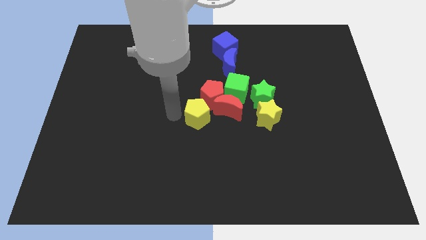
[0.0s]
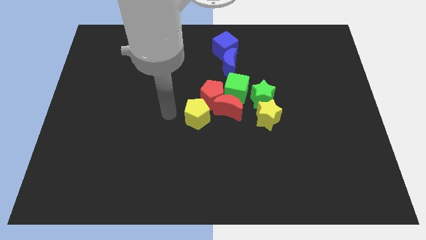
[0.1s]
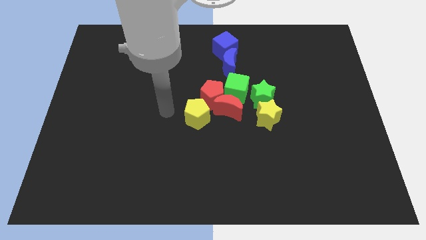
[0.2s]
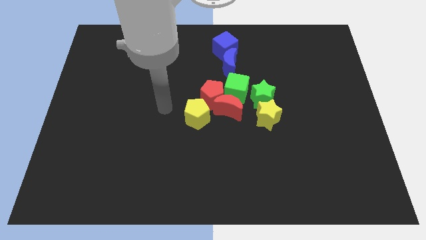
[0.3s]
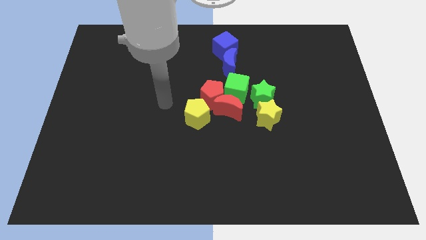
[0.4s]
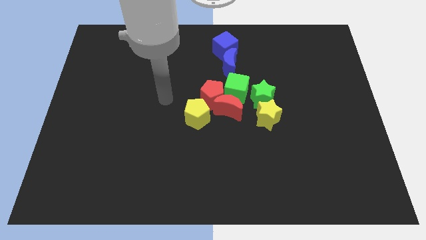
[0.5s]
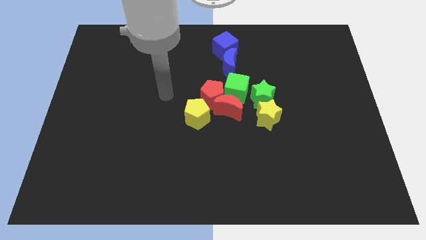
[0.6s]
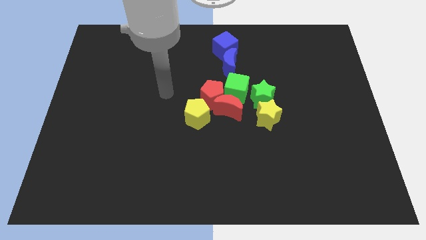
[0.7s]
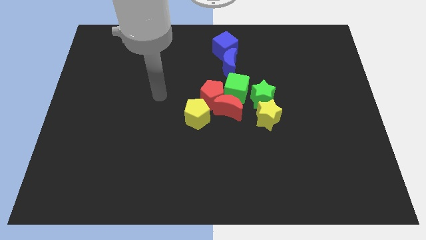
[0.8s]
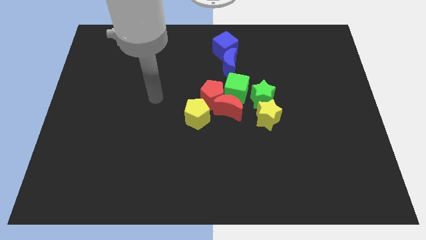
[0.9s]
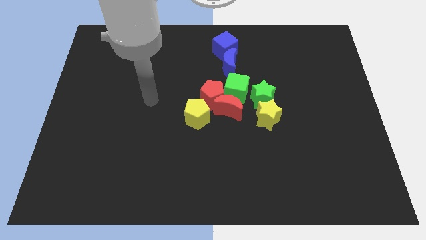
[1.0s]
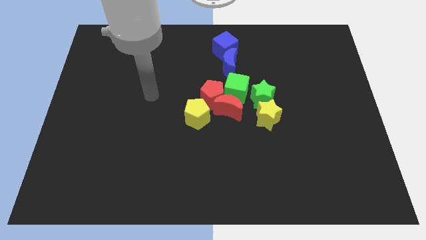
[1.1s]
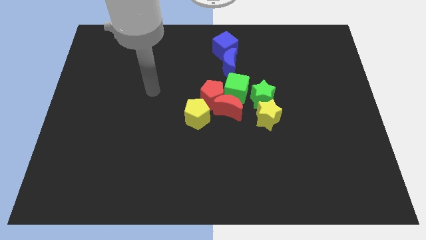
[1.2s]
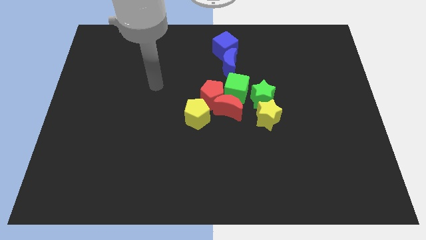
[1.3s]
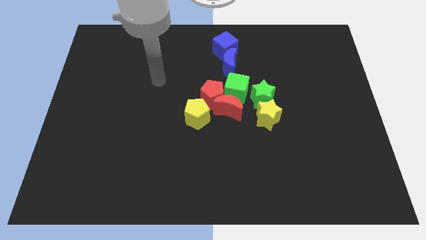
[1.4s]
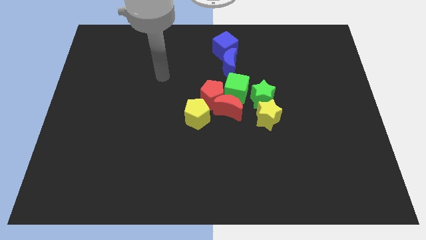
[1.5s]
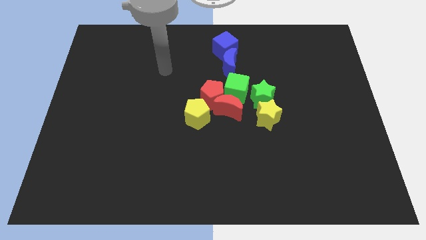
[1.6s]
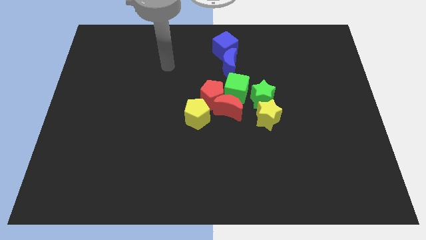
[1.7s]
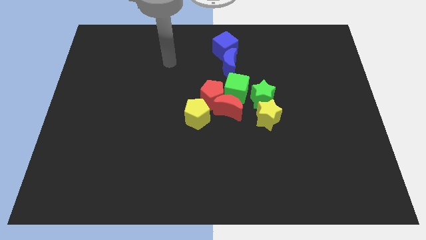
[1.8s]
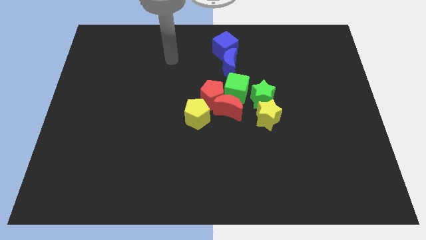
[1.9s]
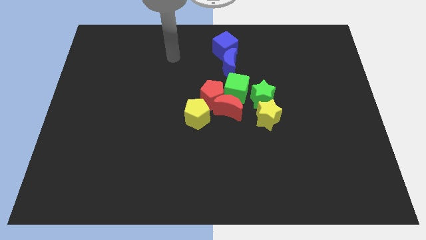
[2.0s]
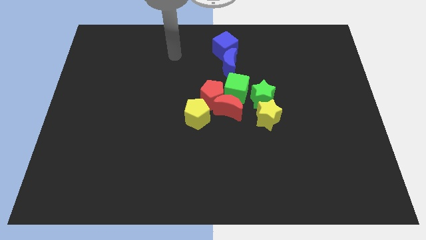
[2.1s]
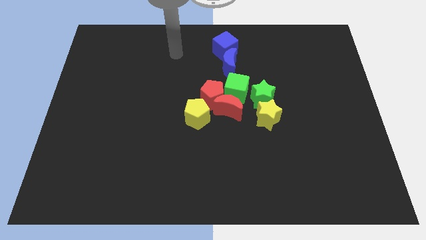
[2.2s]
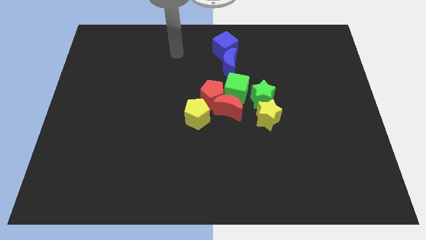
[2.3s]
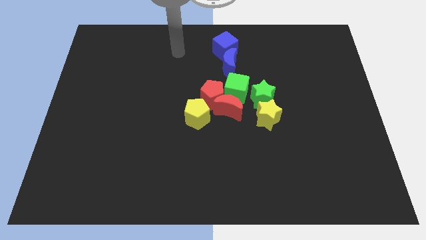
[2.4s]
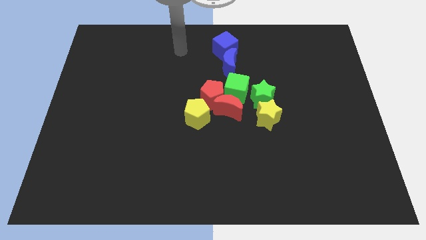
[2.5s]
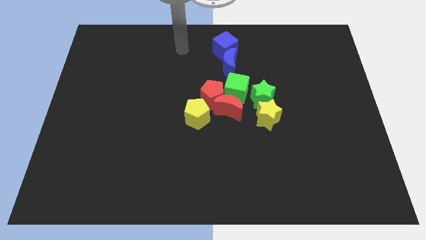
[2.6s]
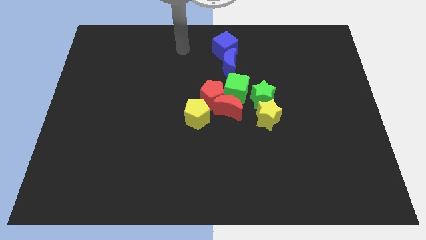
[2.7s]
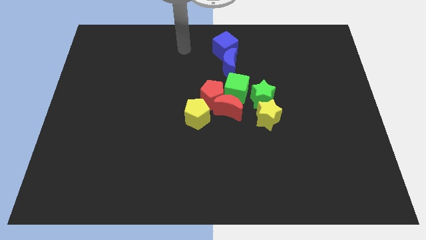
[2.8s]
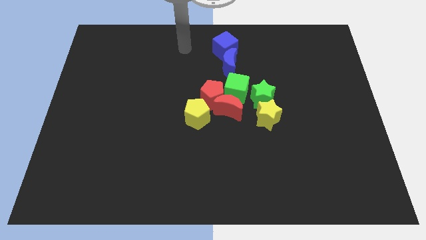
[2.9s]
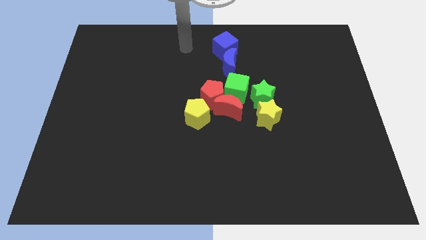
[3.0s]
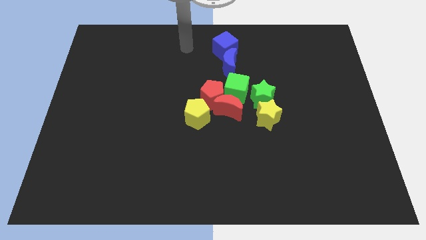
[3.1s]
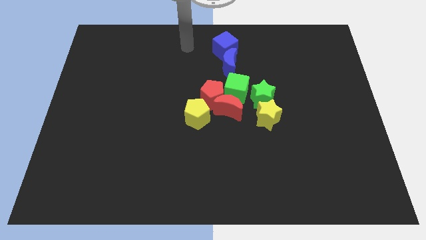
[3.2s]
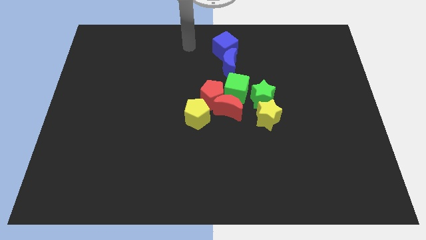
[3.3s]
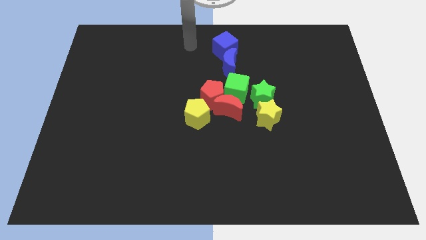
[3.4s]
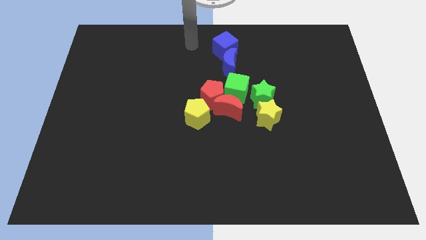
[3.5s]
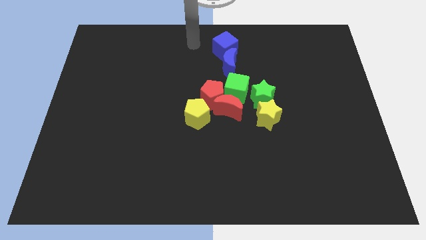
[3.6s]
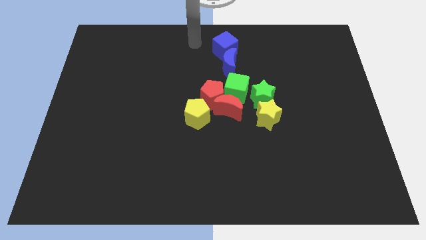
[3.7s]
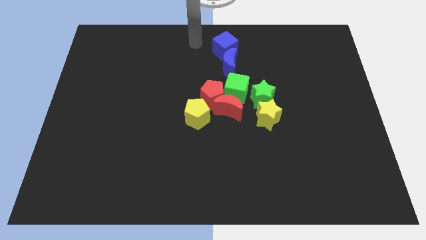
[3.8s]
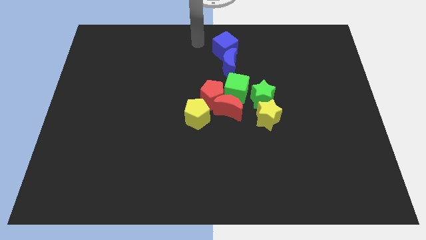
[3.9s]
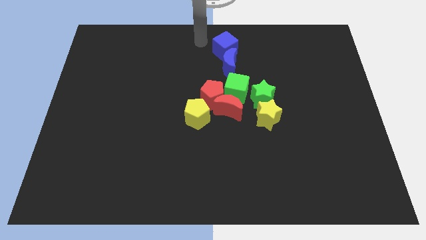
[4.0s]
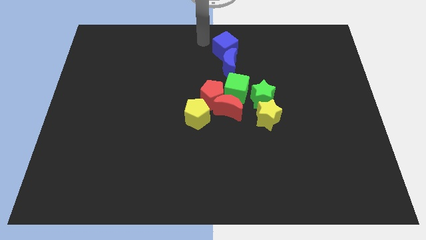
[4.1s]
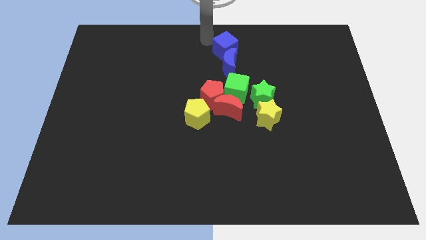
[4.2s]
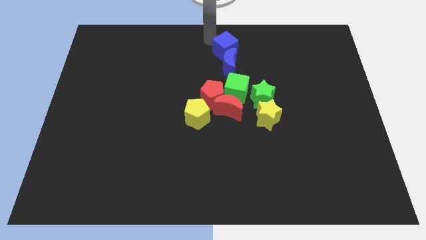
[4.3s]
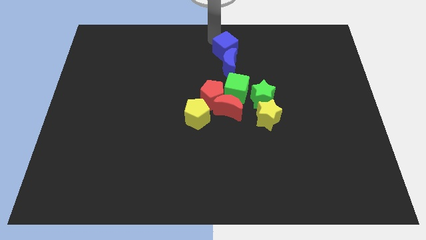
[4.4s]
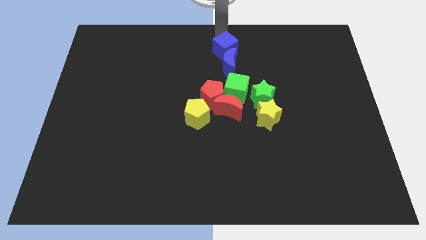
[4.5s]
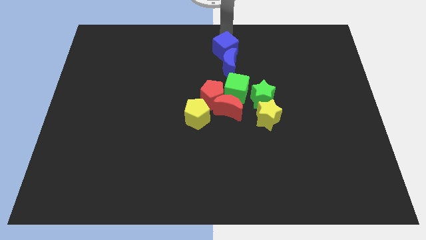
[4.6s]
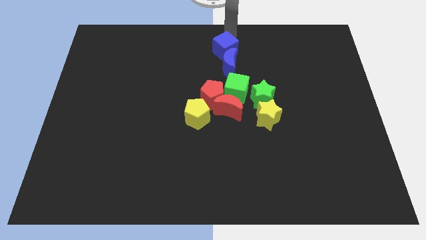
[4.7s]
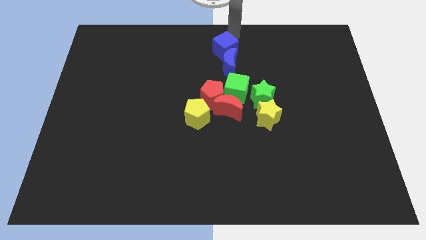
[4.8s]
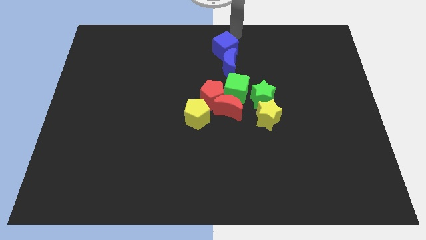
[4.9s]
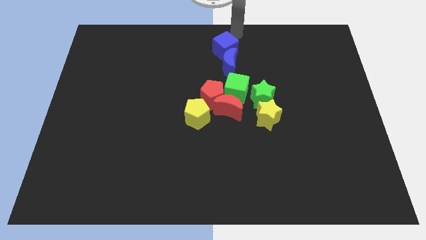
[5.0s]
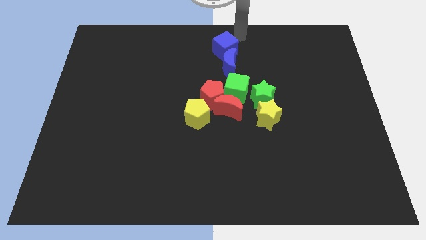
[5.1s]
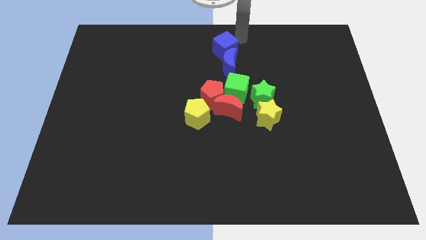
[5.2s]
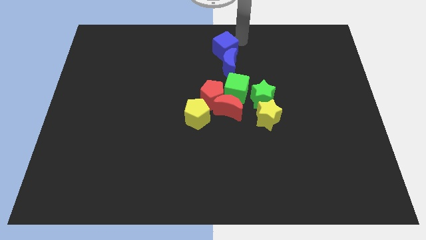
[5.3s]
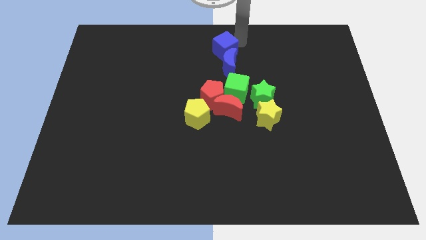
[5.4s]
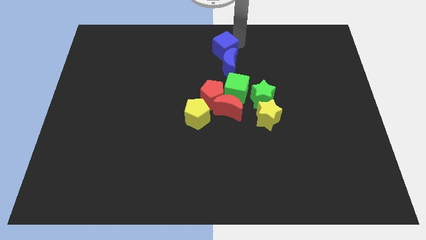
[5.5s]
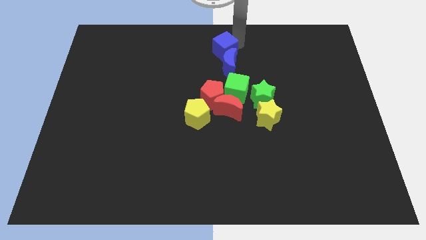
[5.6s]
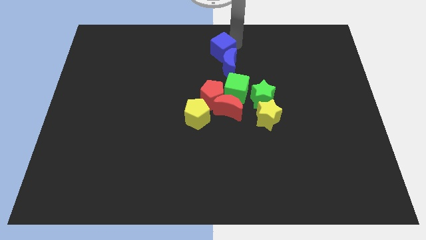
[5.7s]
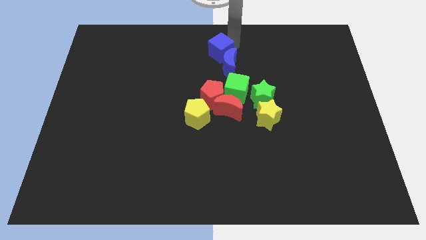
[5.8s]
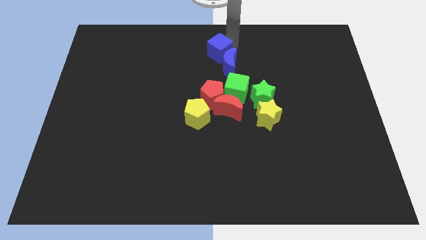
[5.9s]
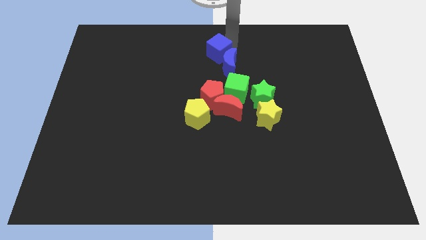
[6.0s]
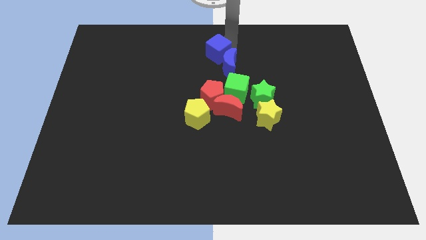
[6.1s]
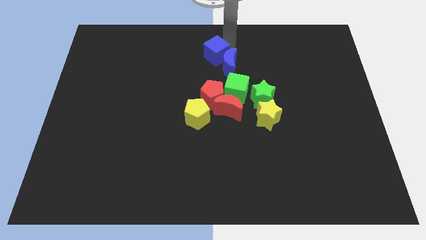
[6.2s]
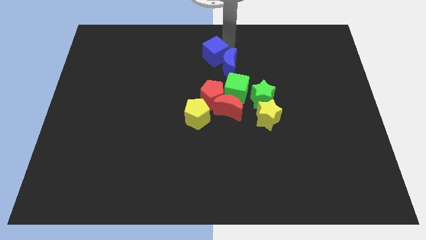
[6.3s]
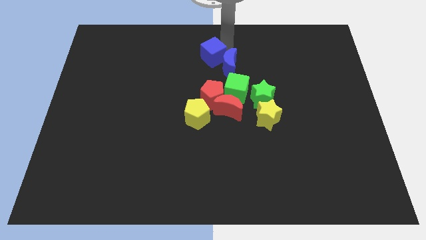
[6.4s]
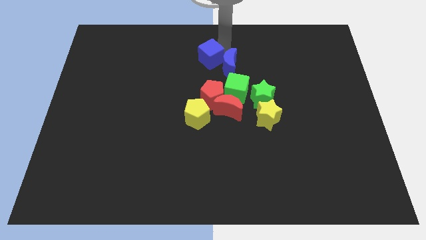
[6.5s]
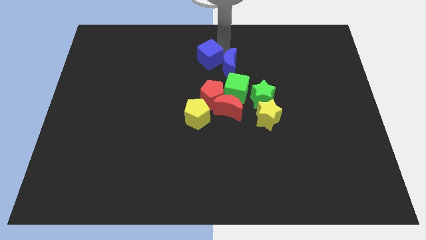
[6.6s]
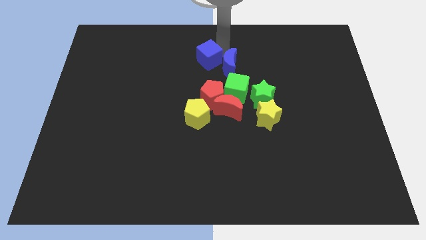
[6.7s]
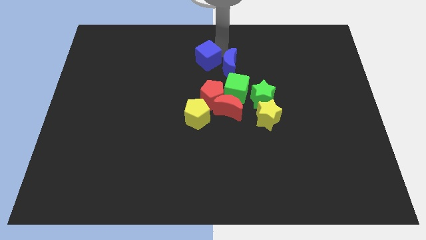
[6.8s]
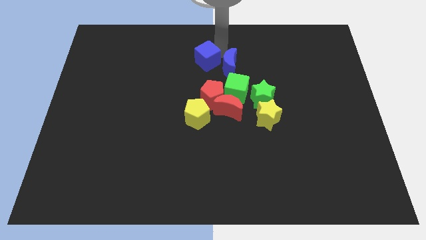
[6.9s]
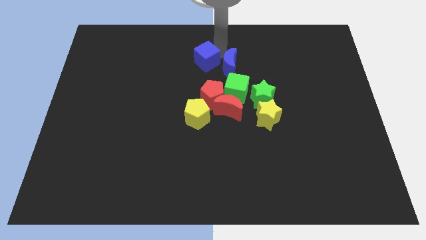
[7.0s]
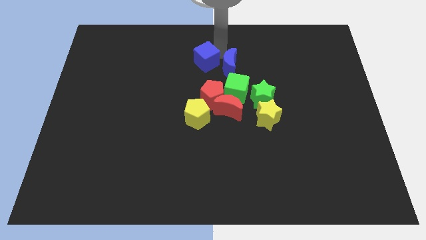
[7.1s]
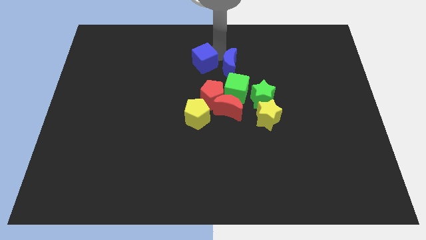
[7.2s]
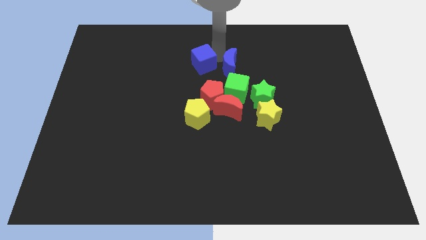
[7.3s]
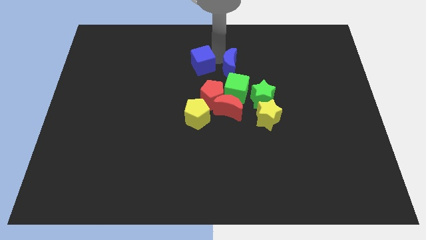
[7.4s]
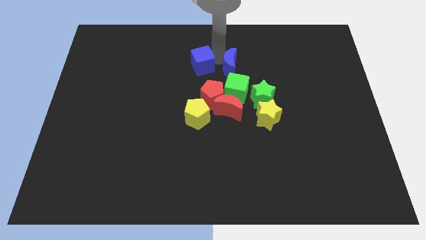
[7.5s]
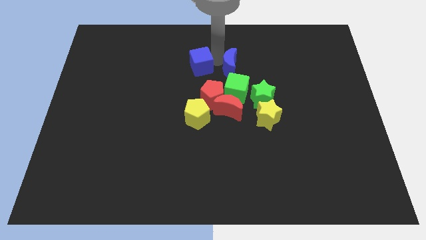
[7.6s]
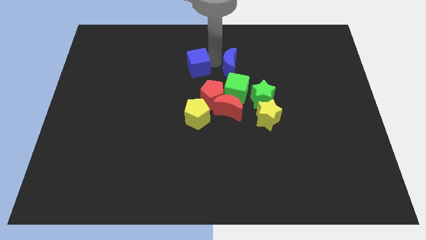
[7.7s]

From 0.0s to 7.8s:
move the blue cube to the left side of the blue crescent

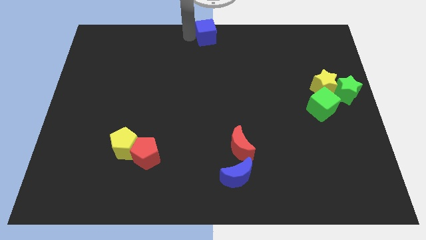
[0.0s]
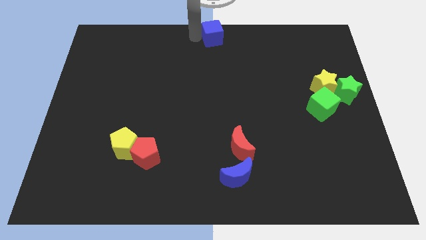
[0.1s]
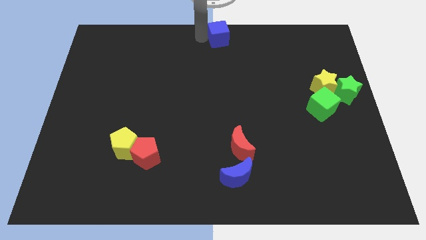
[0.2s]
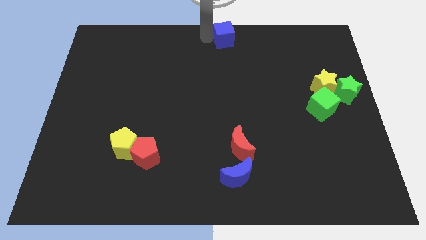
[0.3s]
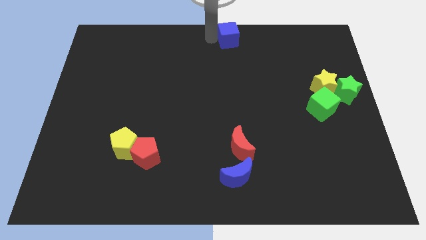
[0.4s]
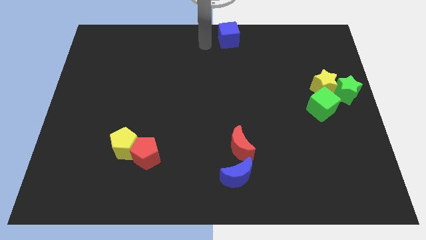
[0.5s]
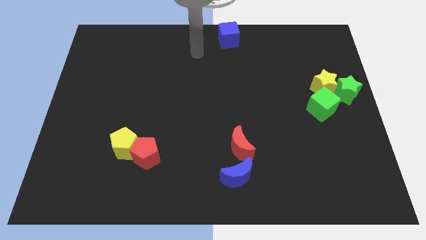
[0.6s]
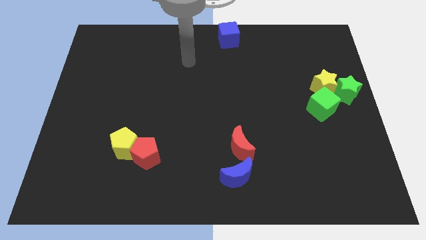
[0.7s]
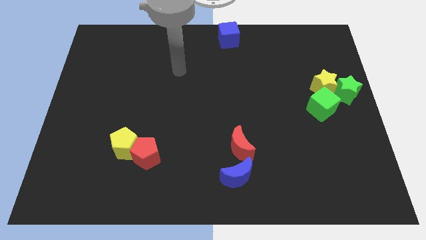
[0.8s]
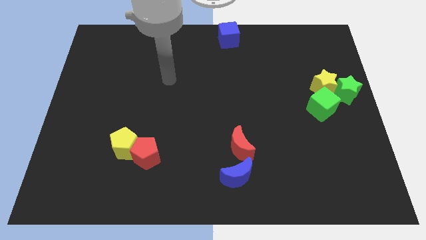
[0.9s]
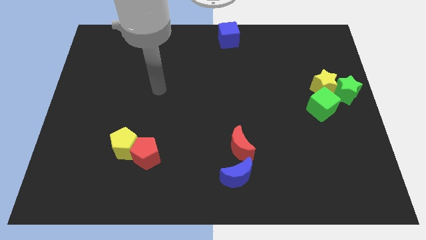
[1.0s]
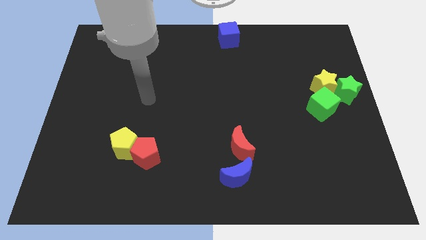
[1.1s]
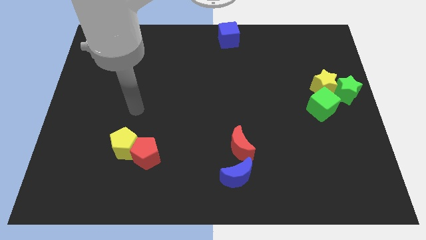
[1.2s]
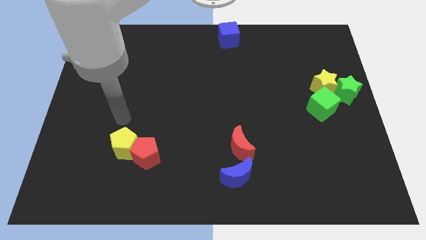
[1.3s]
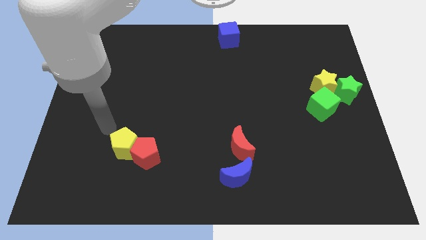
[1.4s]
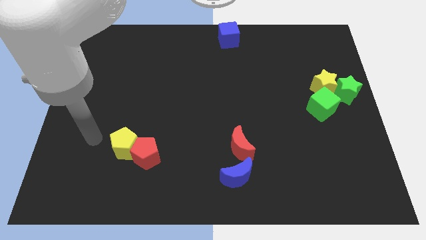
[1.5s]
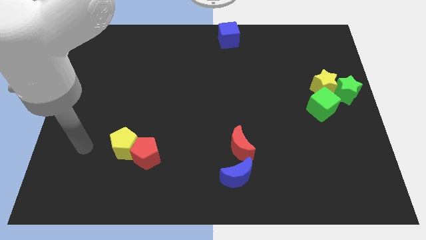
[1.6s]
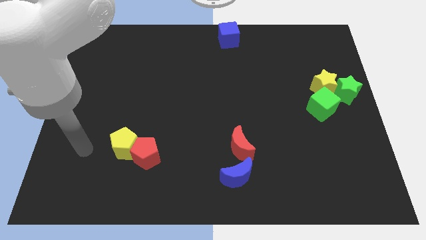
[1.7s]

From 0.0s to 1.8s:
push the blue cube vertically above the red moon
